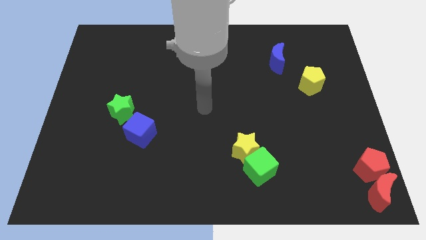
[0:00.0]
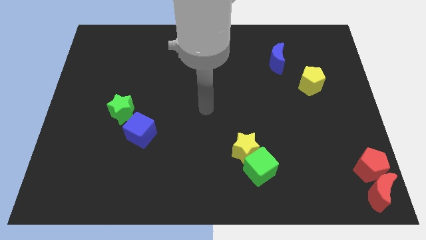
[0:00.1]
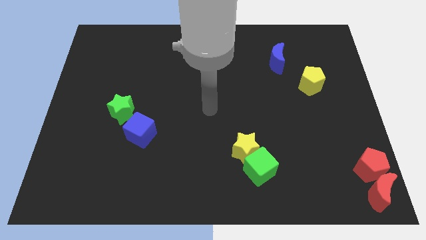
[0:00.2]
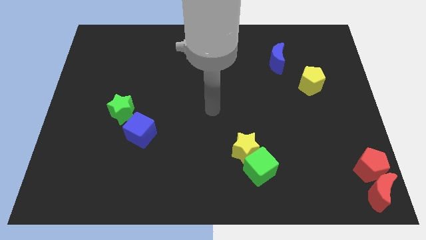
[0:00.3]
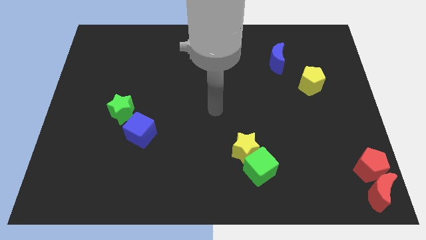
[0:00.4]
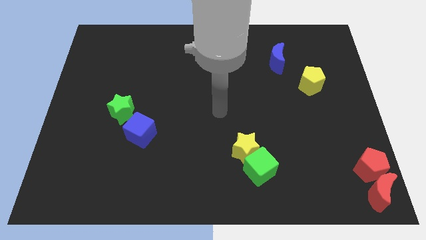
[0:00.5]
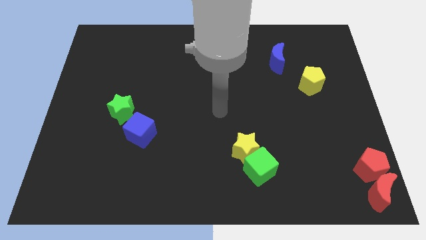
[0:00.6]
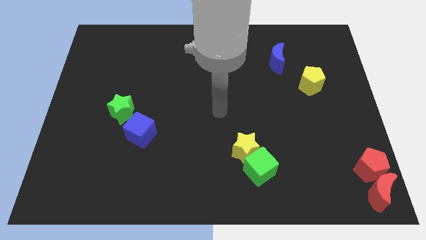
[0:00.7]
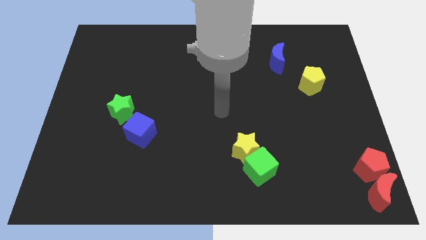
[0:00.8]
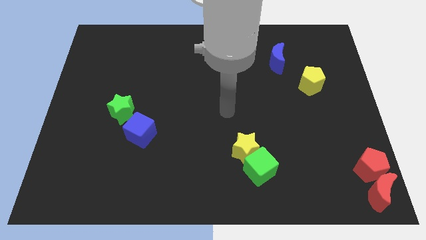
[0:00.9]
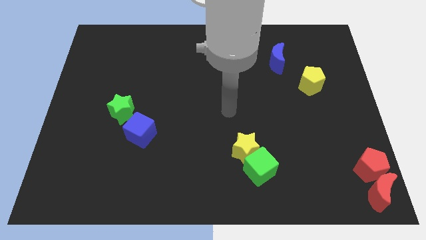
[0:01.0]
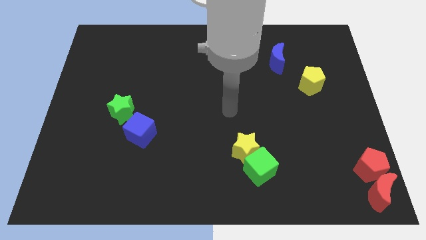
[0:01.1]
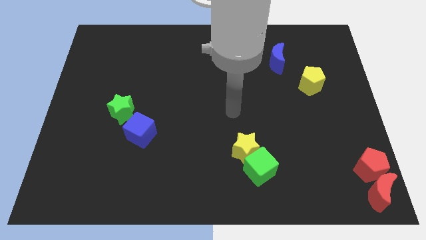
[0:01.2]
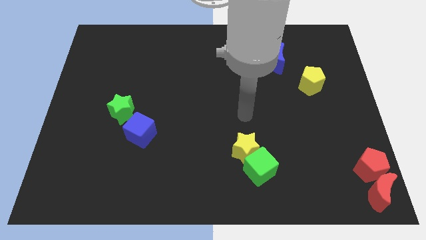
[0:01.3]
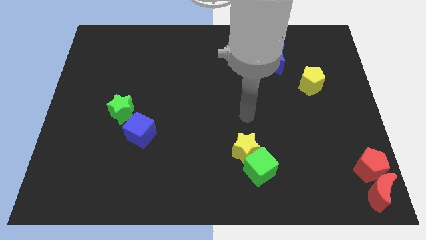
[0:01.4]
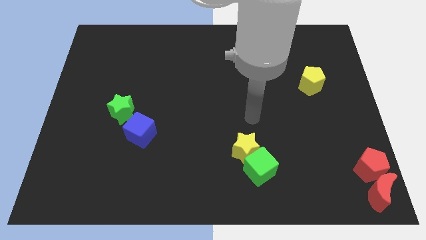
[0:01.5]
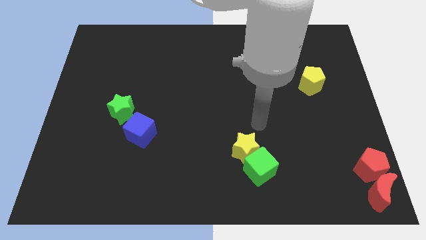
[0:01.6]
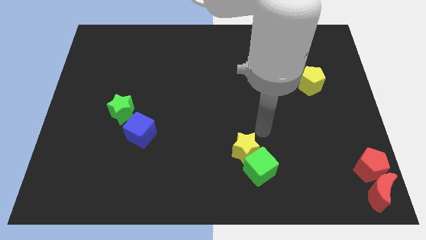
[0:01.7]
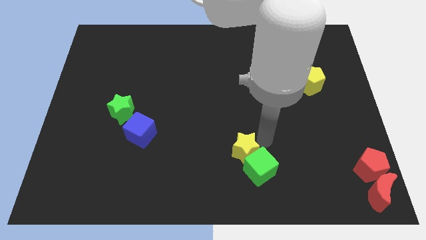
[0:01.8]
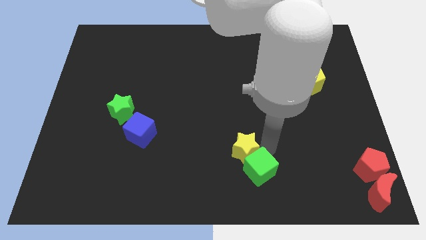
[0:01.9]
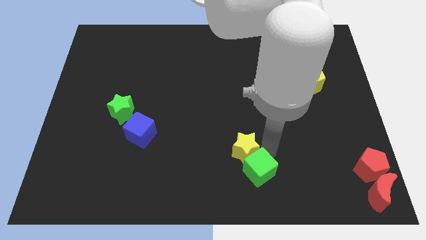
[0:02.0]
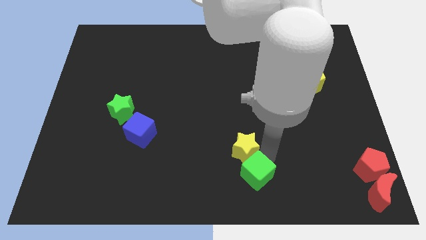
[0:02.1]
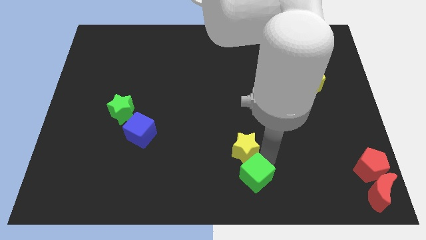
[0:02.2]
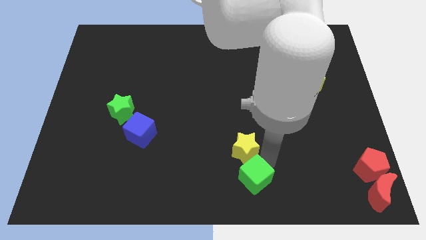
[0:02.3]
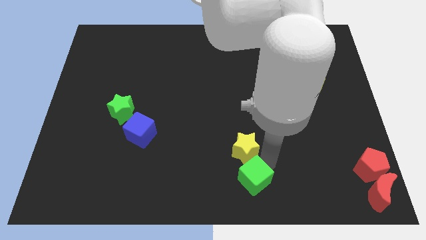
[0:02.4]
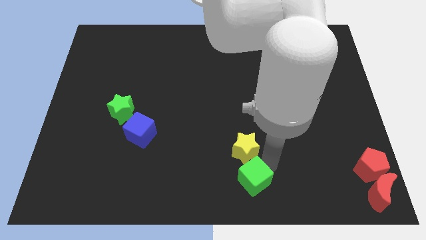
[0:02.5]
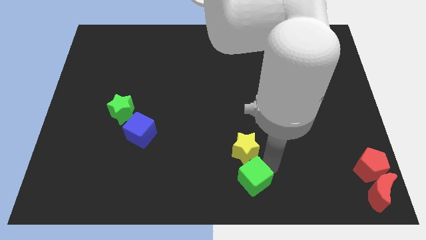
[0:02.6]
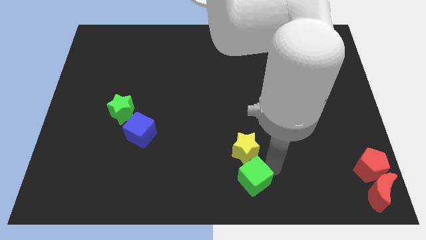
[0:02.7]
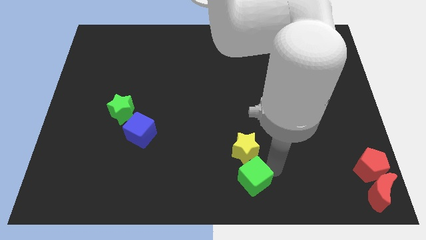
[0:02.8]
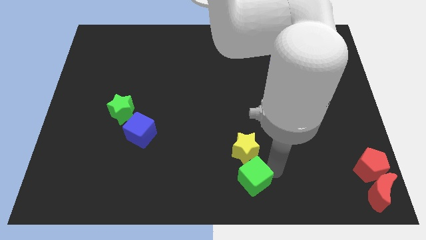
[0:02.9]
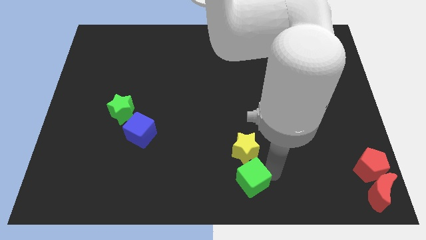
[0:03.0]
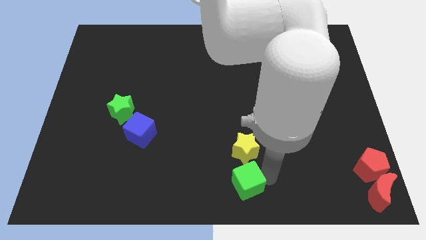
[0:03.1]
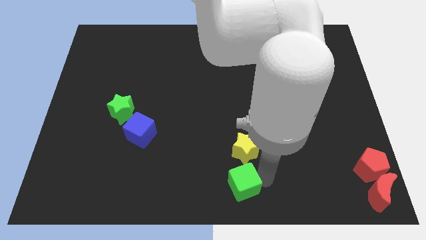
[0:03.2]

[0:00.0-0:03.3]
push green cube below yellow star

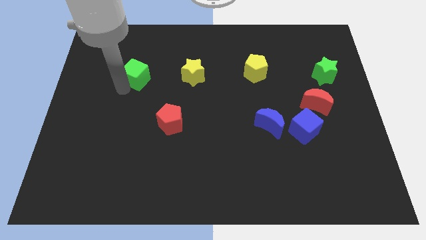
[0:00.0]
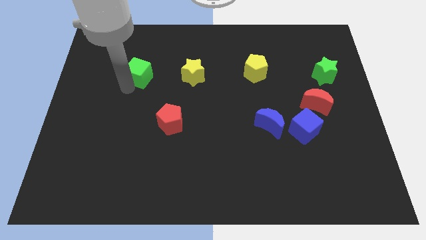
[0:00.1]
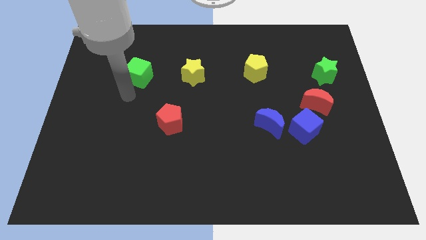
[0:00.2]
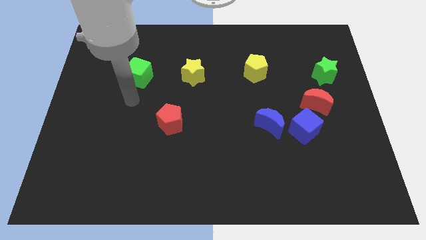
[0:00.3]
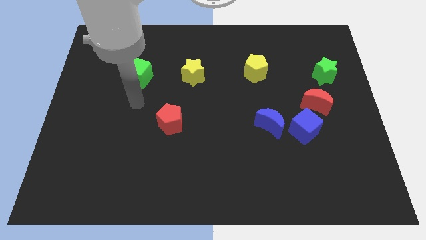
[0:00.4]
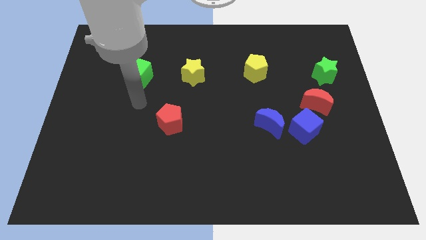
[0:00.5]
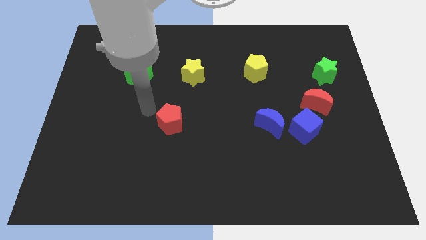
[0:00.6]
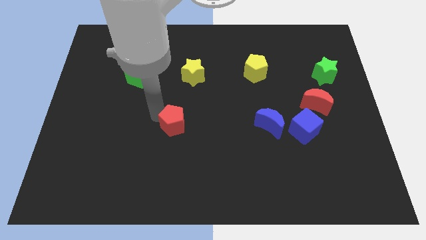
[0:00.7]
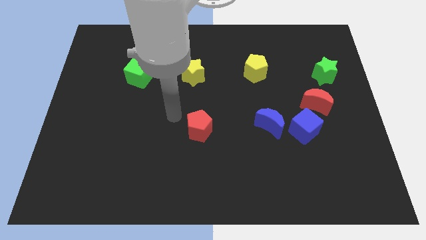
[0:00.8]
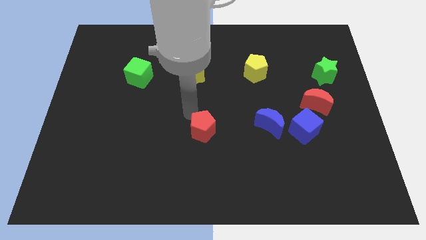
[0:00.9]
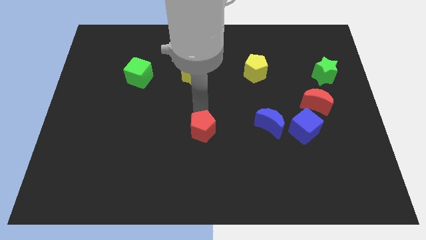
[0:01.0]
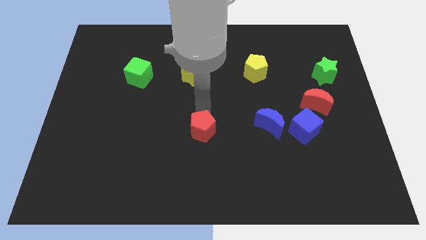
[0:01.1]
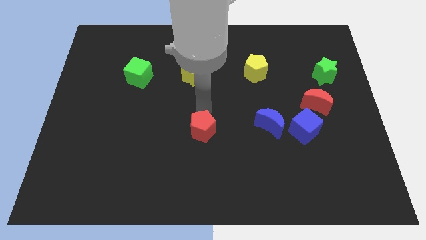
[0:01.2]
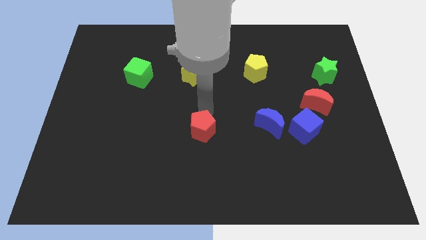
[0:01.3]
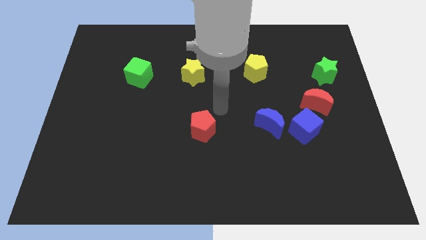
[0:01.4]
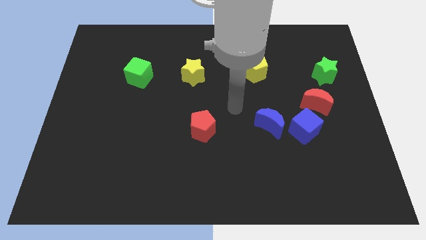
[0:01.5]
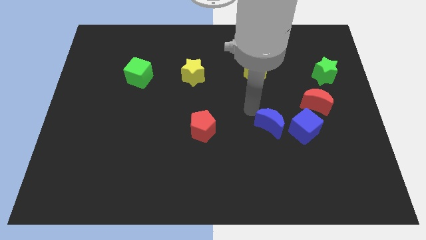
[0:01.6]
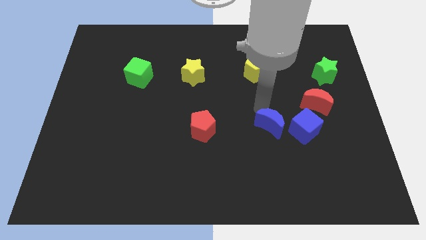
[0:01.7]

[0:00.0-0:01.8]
slightly push the red pentagon below the yellow star

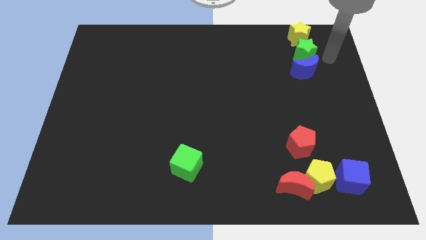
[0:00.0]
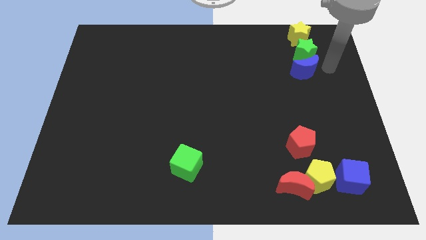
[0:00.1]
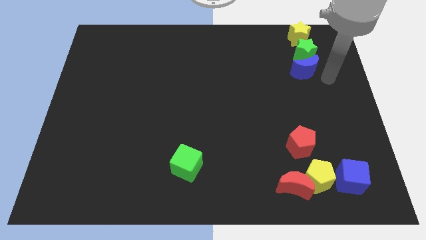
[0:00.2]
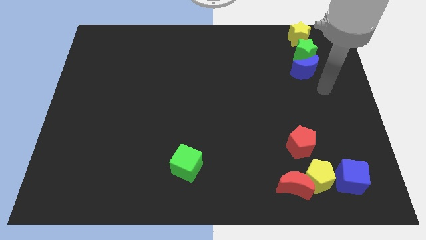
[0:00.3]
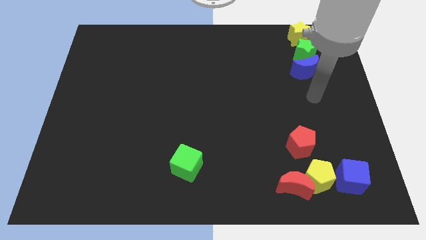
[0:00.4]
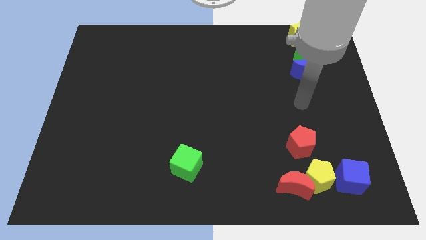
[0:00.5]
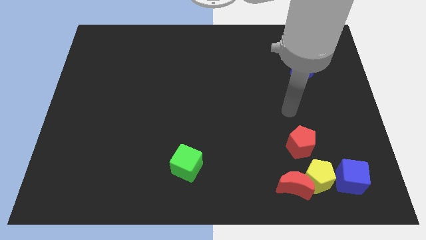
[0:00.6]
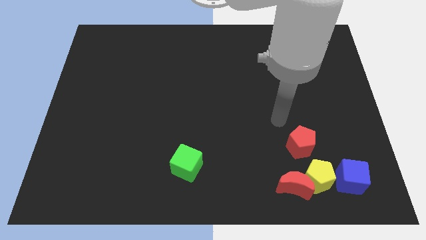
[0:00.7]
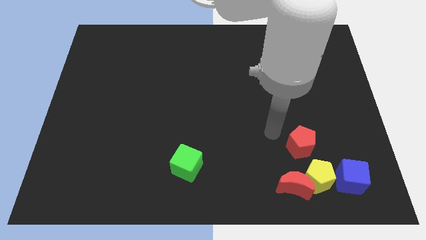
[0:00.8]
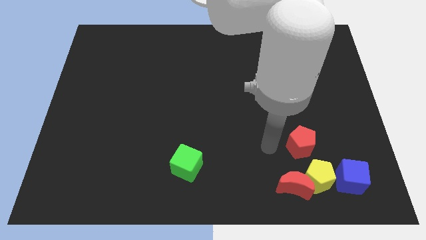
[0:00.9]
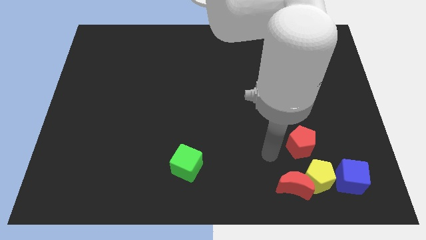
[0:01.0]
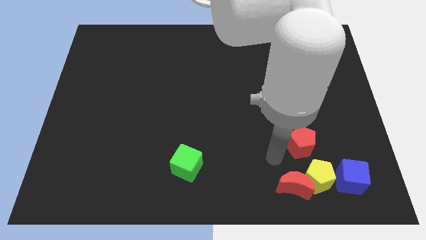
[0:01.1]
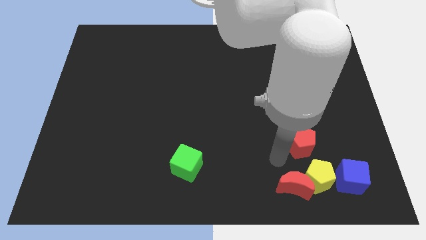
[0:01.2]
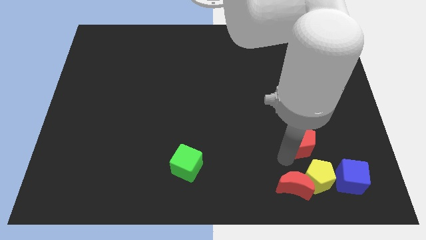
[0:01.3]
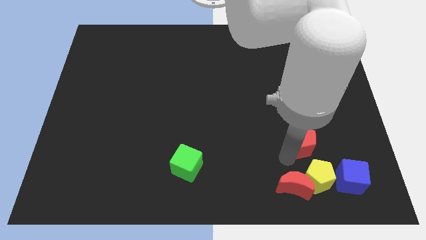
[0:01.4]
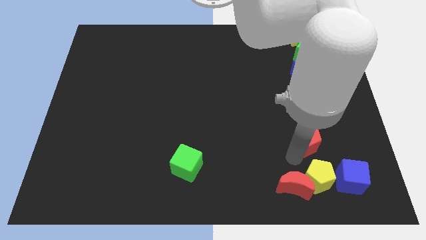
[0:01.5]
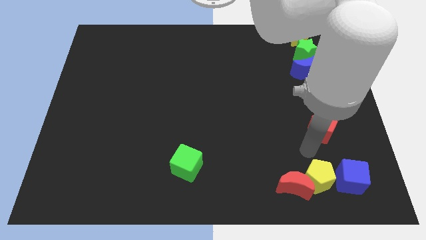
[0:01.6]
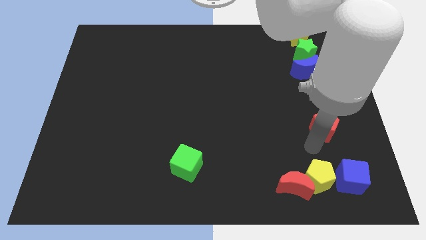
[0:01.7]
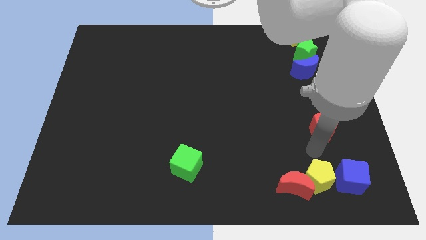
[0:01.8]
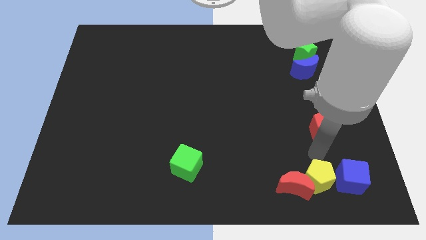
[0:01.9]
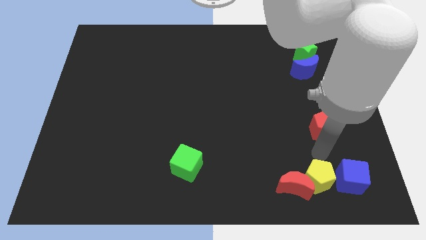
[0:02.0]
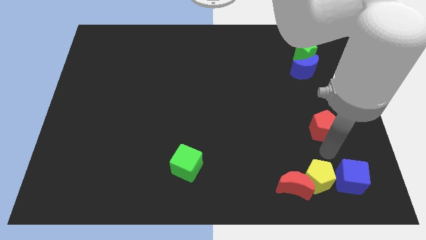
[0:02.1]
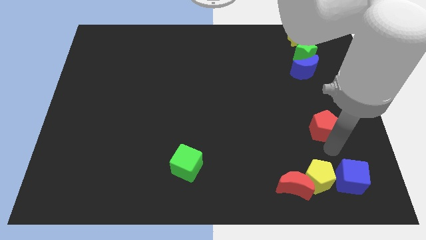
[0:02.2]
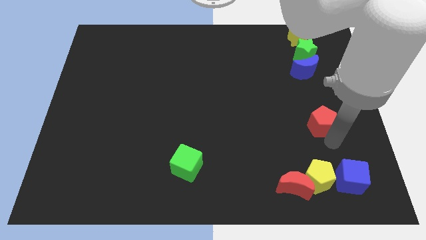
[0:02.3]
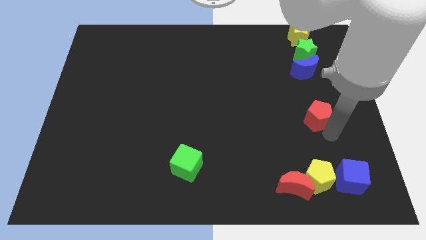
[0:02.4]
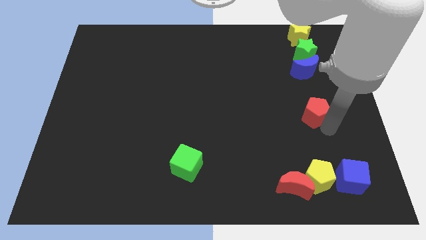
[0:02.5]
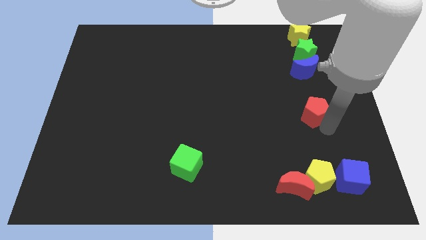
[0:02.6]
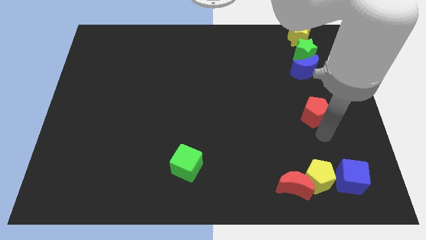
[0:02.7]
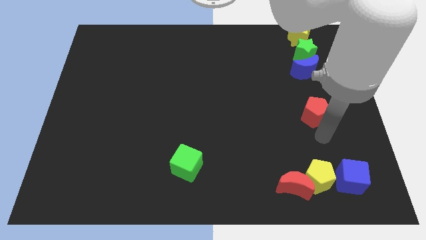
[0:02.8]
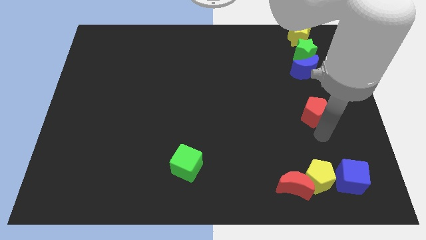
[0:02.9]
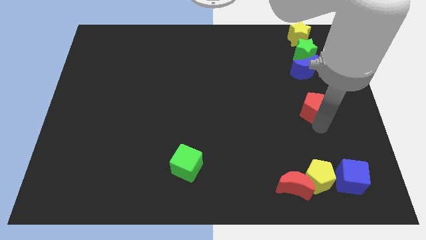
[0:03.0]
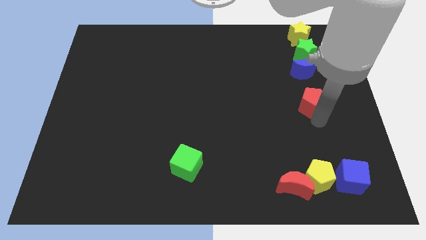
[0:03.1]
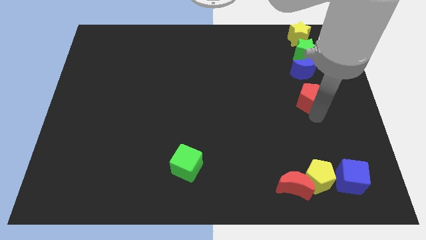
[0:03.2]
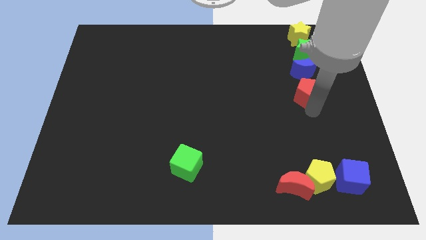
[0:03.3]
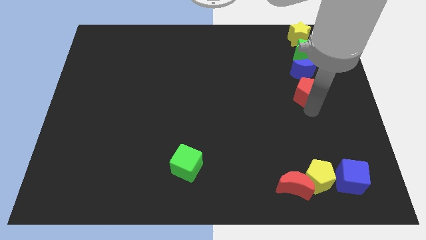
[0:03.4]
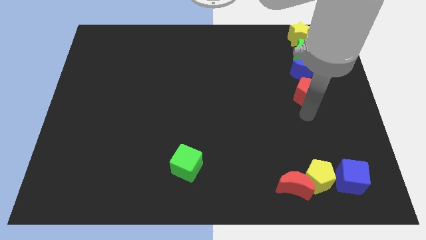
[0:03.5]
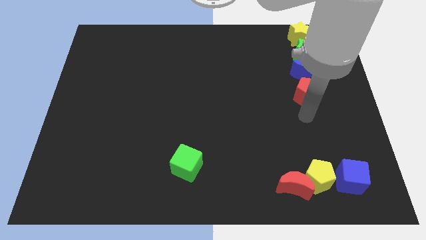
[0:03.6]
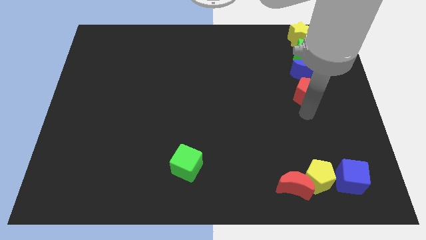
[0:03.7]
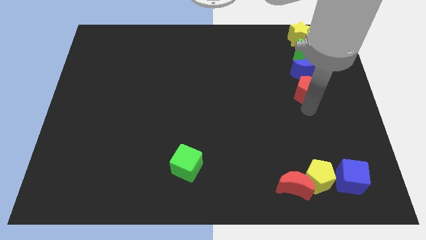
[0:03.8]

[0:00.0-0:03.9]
push the red pentagon closer to the blue moon
